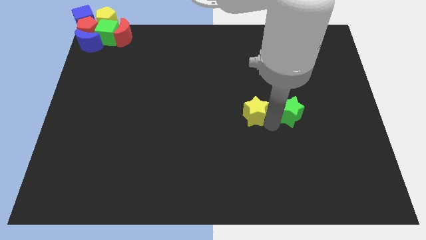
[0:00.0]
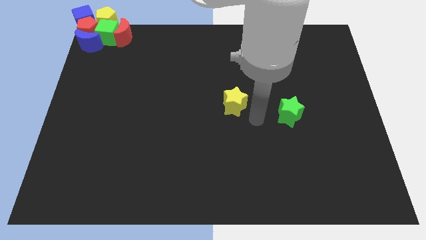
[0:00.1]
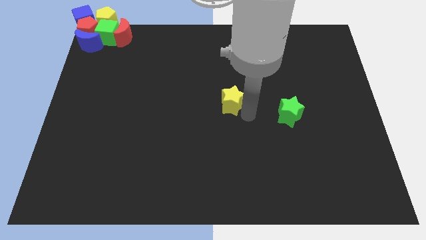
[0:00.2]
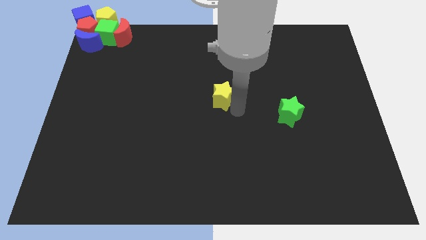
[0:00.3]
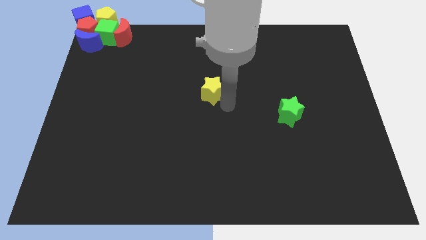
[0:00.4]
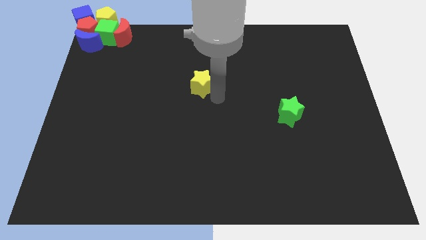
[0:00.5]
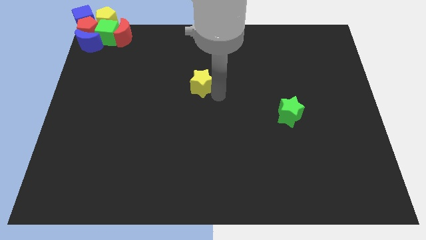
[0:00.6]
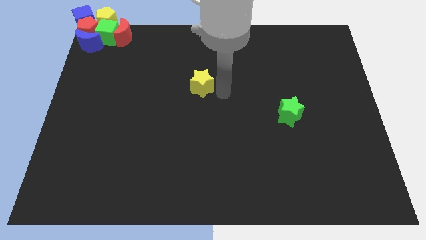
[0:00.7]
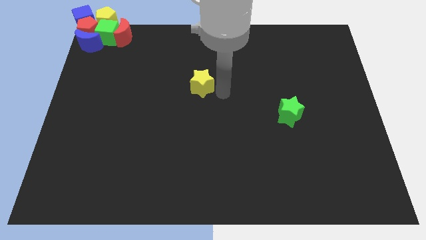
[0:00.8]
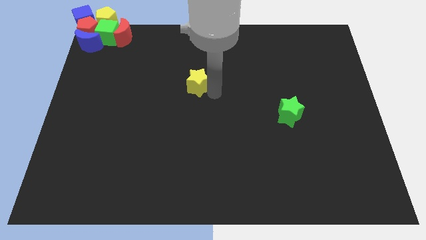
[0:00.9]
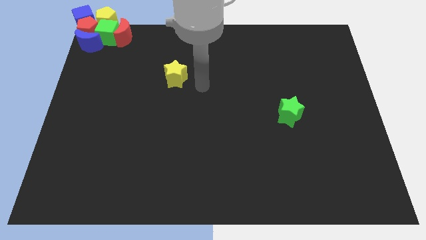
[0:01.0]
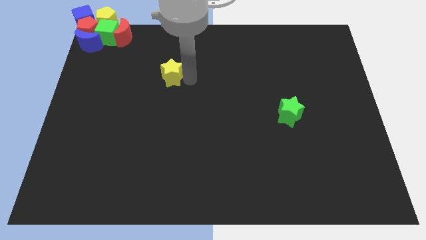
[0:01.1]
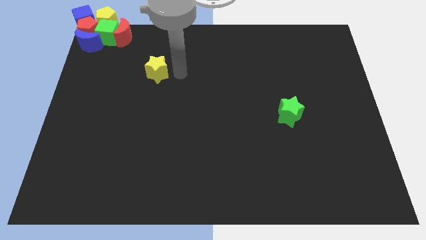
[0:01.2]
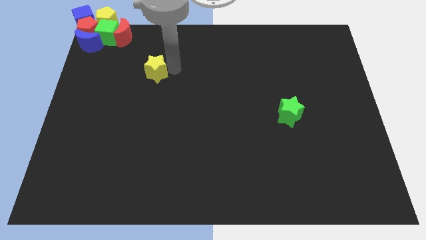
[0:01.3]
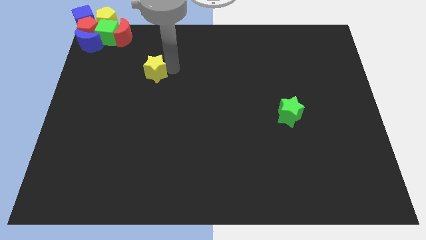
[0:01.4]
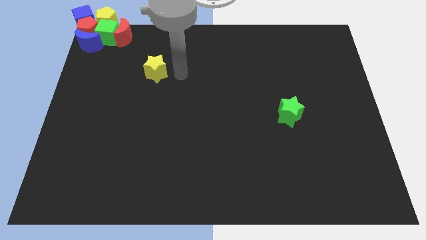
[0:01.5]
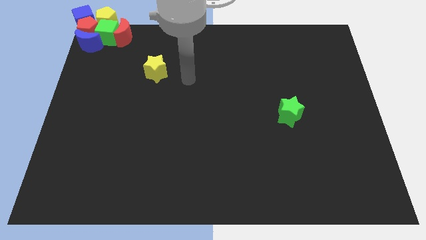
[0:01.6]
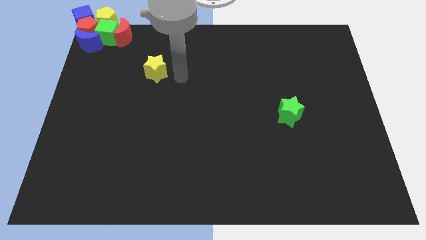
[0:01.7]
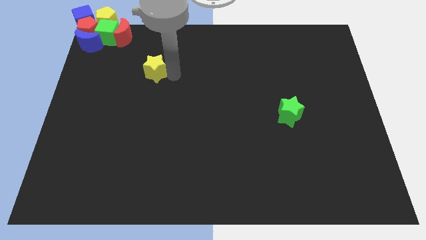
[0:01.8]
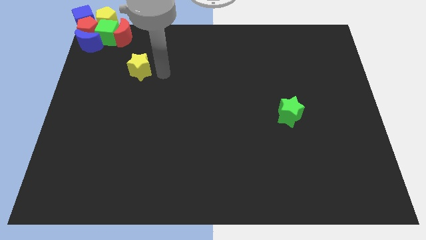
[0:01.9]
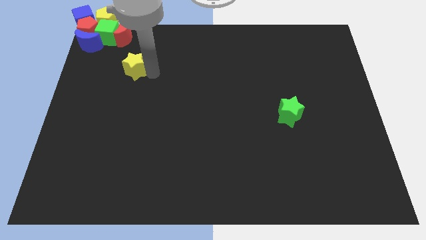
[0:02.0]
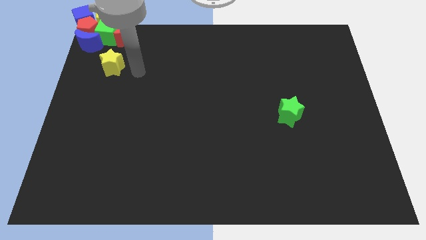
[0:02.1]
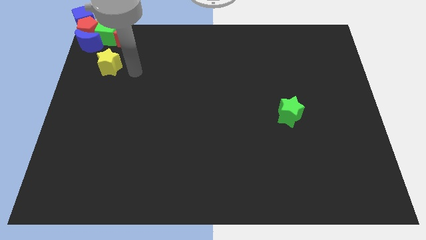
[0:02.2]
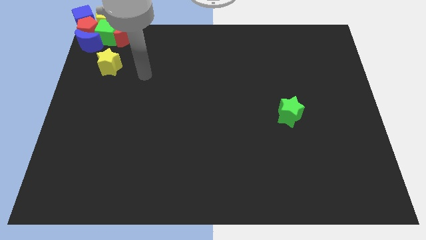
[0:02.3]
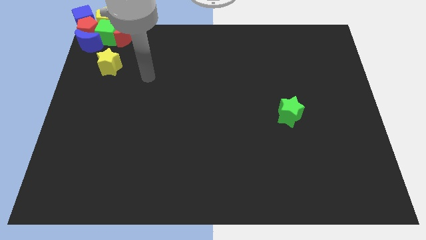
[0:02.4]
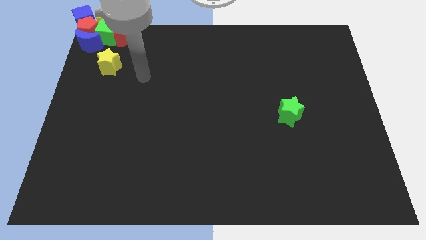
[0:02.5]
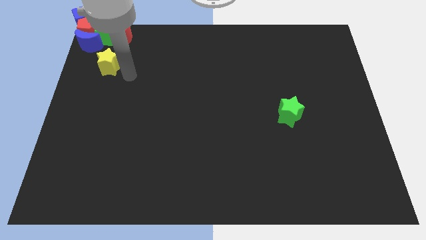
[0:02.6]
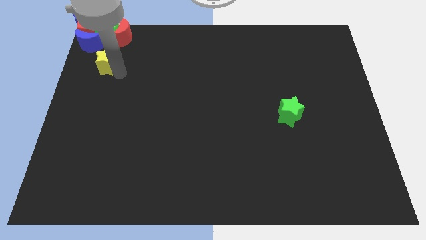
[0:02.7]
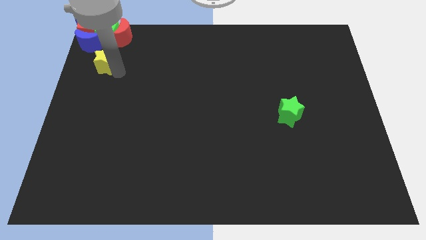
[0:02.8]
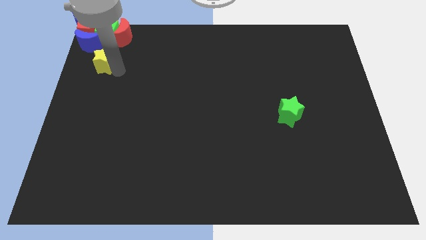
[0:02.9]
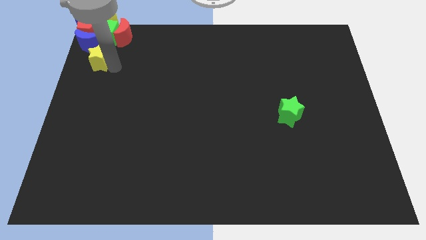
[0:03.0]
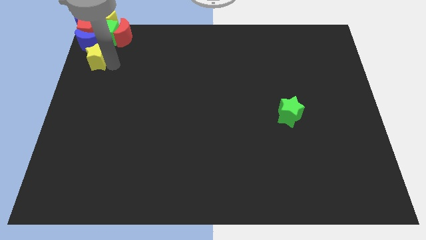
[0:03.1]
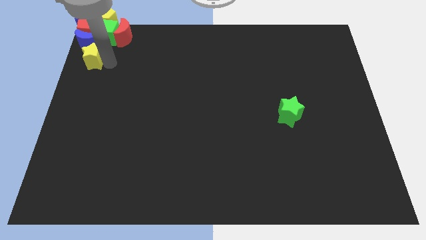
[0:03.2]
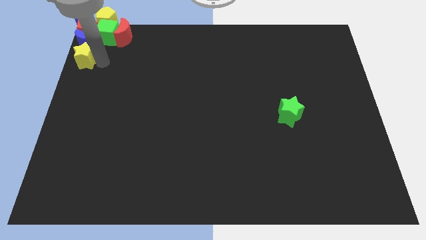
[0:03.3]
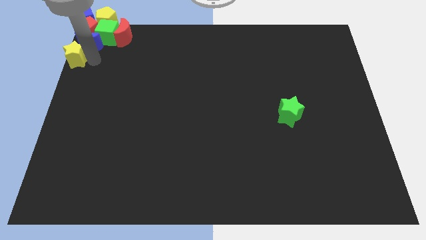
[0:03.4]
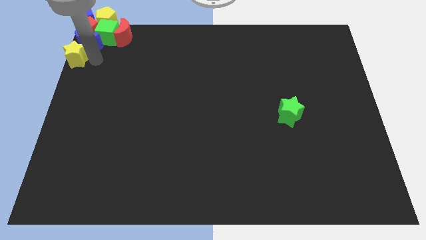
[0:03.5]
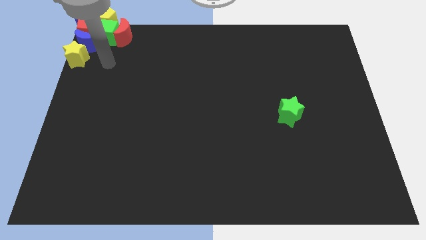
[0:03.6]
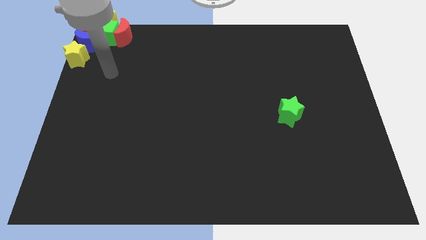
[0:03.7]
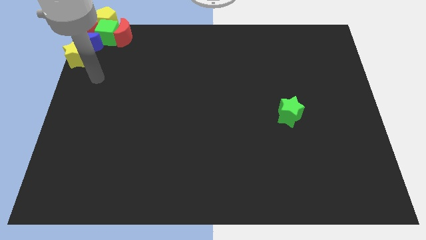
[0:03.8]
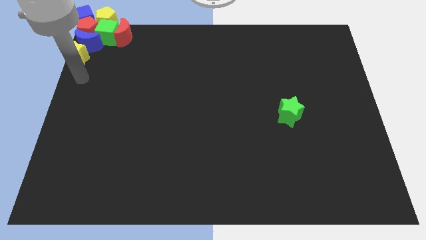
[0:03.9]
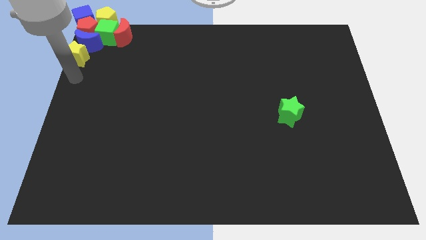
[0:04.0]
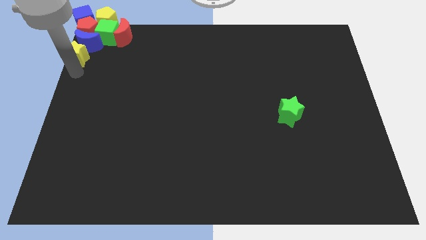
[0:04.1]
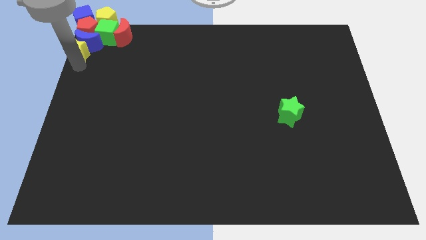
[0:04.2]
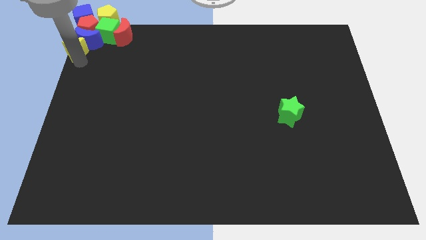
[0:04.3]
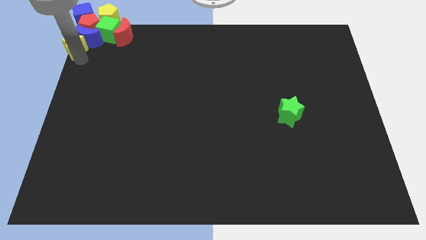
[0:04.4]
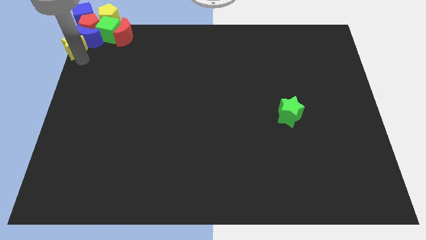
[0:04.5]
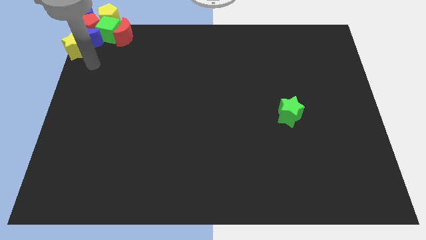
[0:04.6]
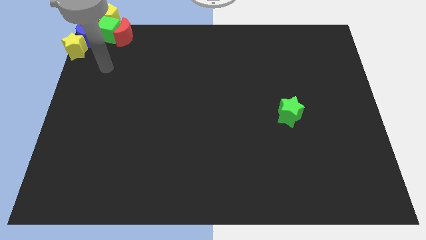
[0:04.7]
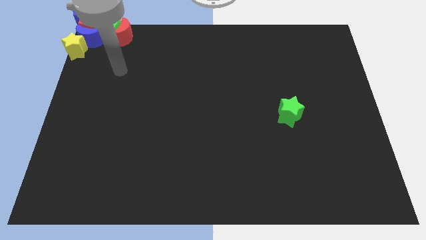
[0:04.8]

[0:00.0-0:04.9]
move the yellow star to the top left corner

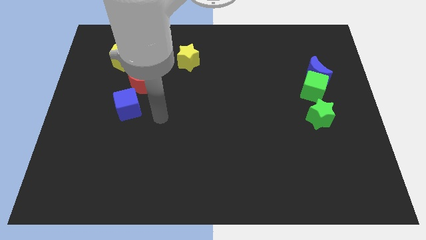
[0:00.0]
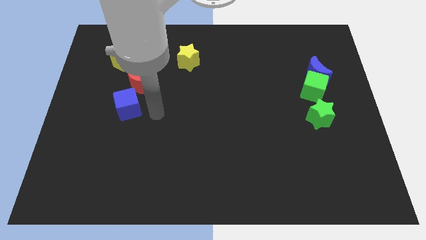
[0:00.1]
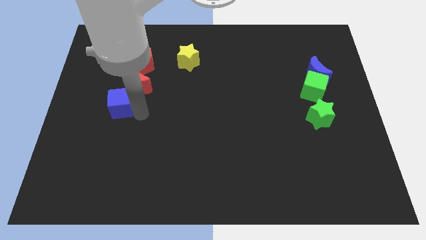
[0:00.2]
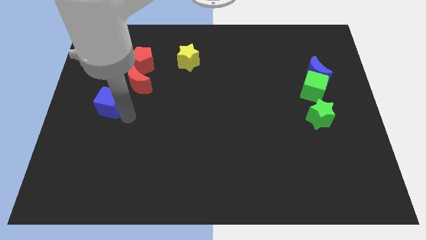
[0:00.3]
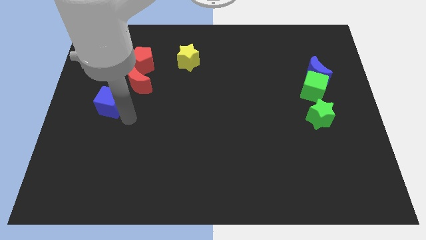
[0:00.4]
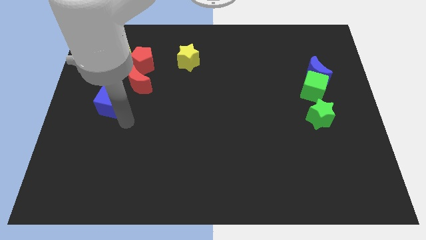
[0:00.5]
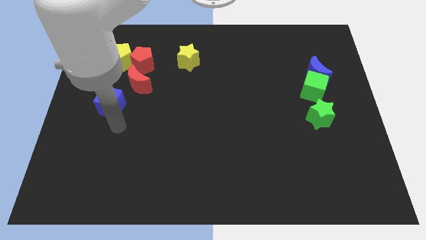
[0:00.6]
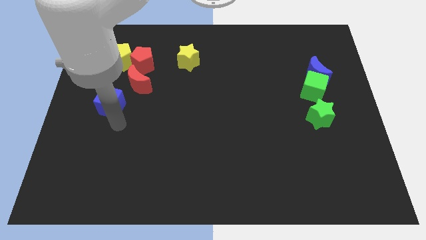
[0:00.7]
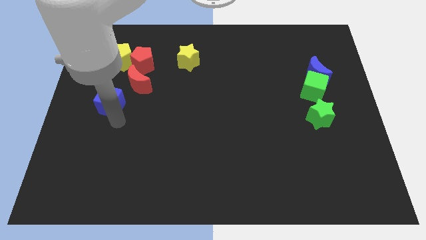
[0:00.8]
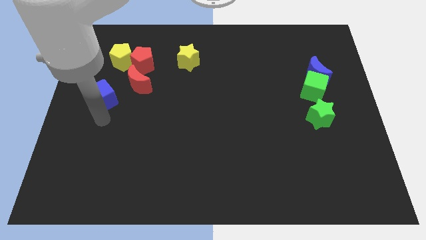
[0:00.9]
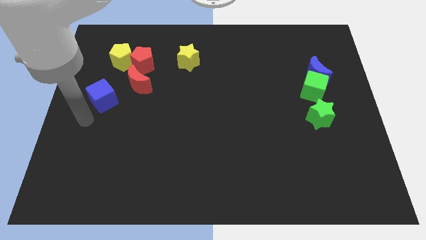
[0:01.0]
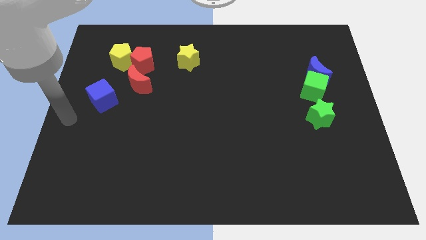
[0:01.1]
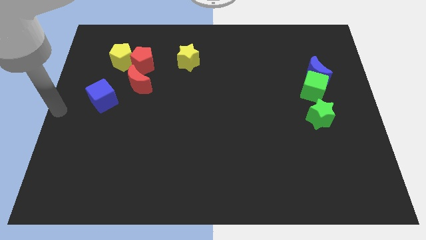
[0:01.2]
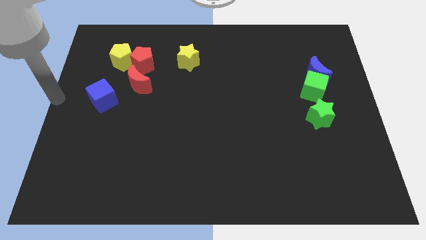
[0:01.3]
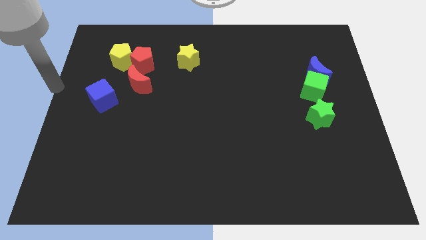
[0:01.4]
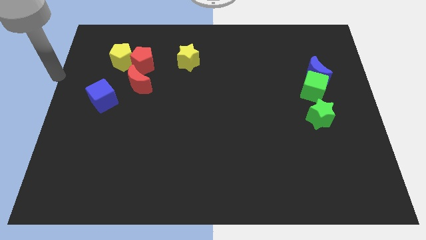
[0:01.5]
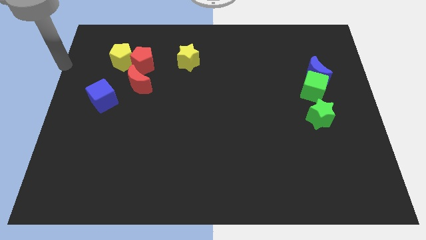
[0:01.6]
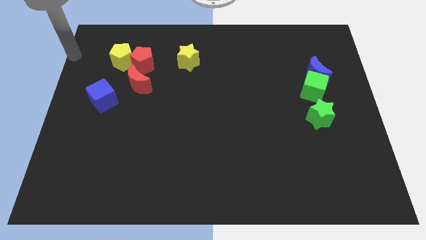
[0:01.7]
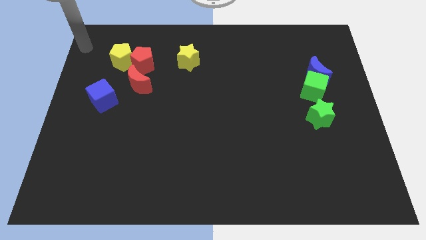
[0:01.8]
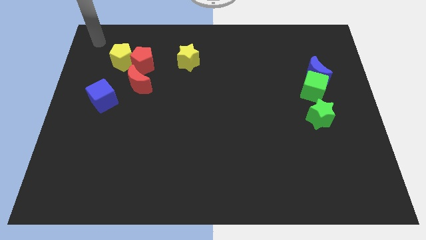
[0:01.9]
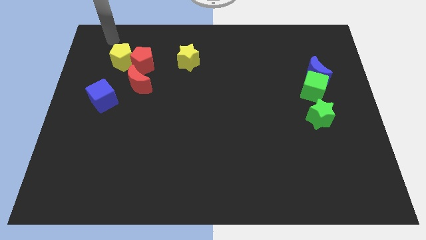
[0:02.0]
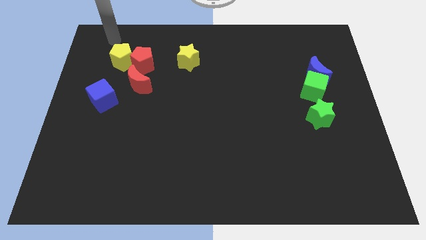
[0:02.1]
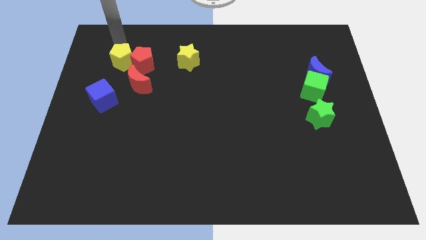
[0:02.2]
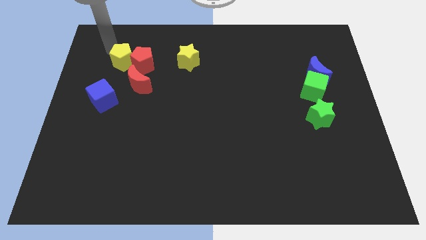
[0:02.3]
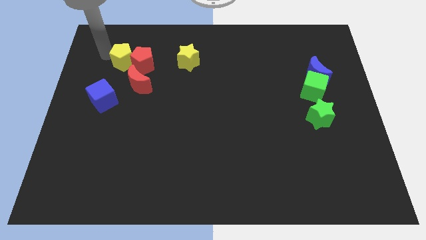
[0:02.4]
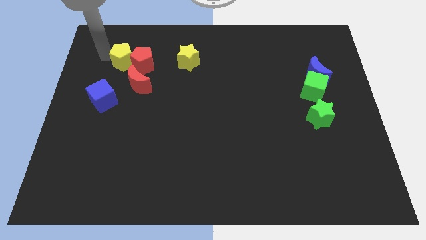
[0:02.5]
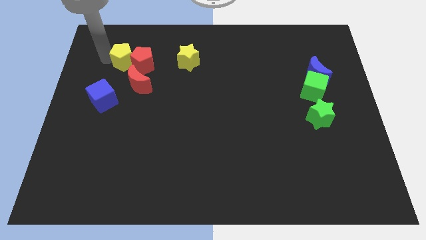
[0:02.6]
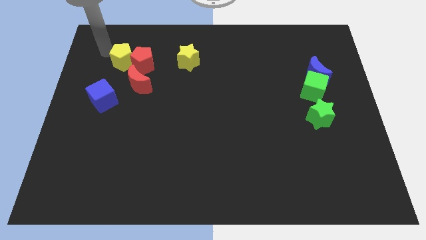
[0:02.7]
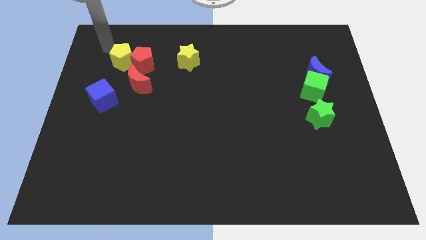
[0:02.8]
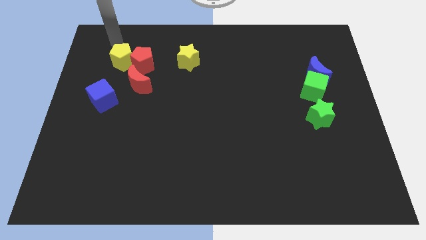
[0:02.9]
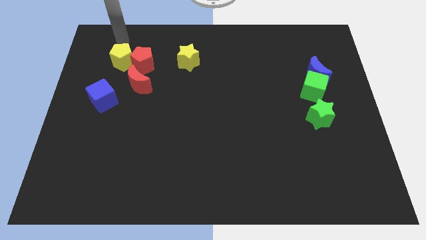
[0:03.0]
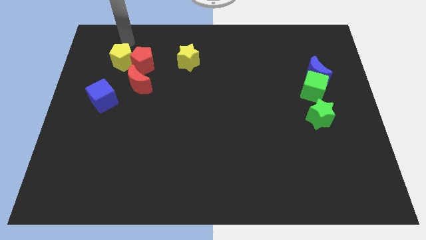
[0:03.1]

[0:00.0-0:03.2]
push the blue cube to the left side of the board

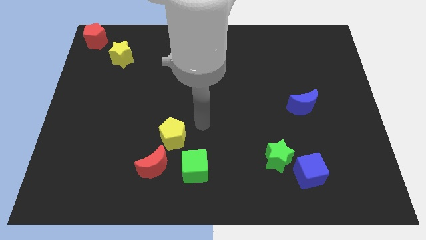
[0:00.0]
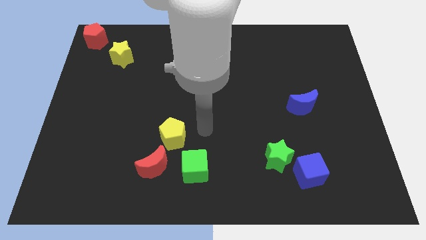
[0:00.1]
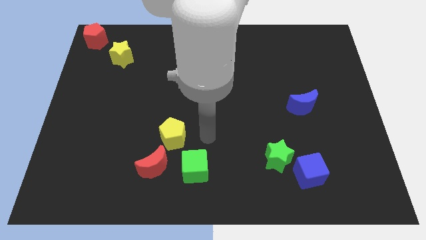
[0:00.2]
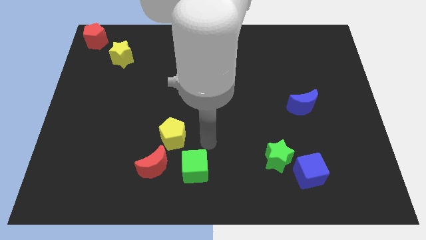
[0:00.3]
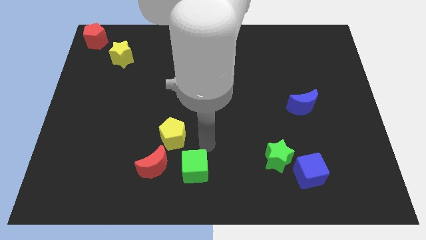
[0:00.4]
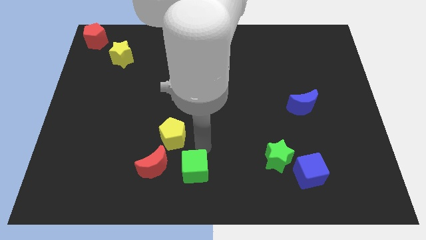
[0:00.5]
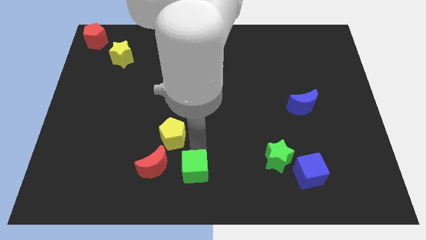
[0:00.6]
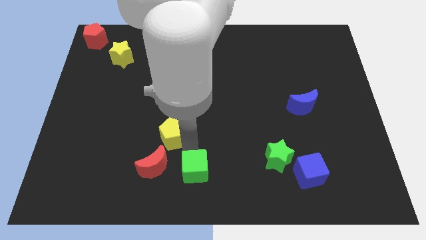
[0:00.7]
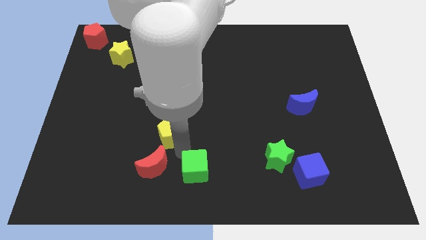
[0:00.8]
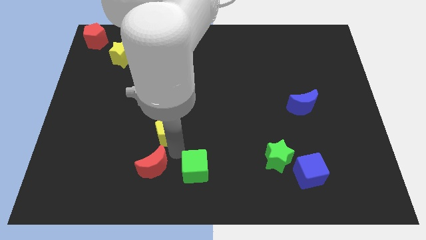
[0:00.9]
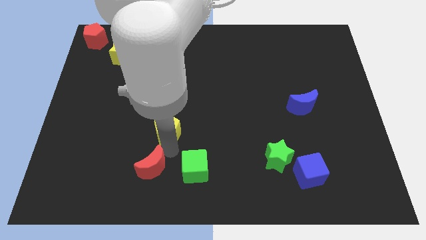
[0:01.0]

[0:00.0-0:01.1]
move your arm to the bottom side of the yellow pentagon
